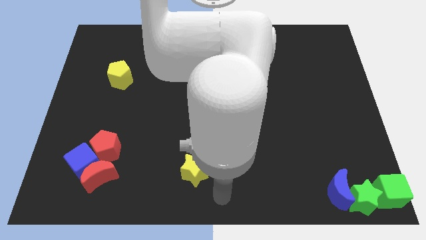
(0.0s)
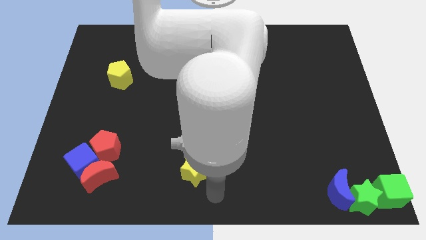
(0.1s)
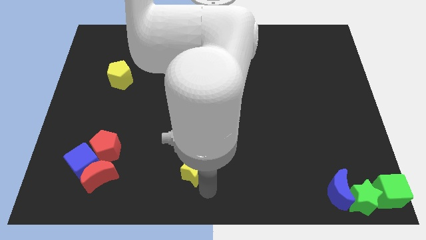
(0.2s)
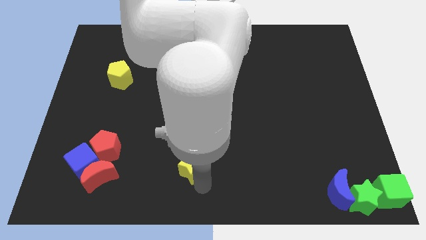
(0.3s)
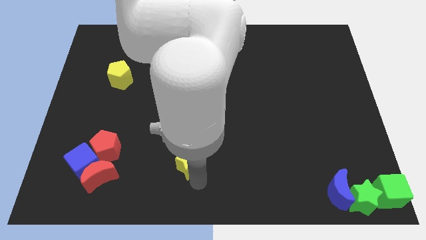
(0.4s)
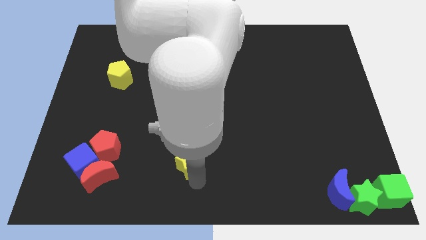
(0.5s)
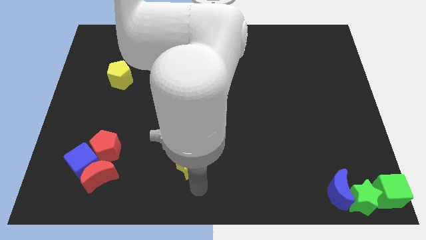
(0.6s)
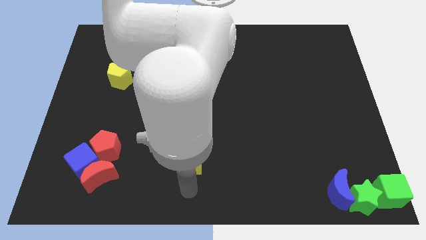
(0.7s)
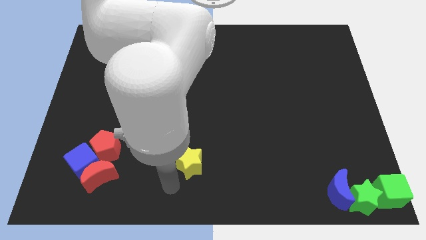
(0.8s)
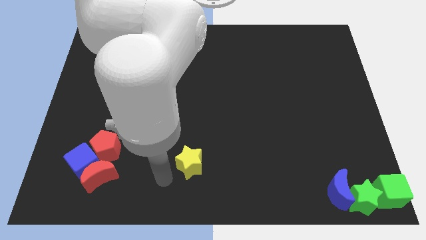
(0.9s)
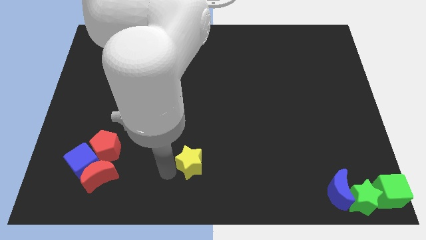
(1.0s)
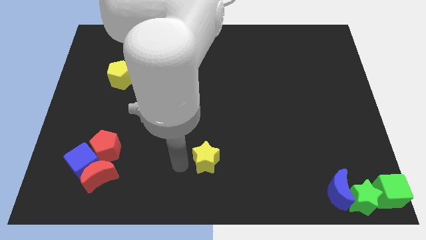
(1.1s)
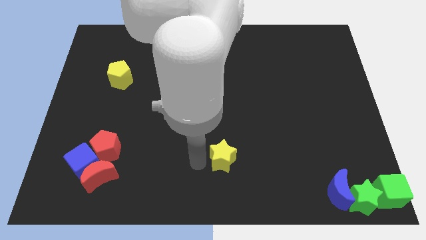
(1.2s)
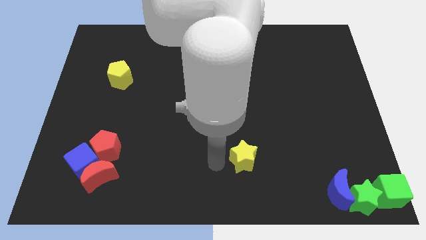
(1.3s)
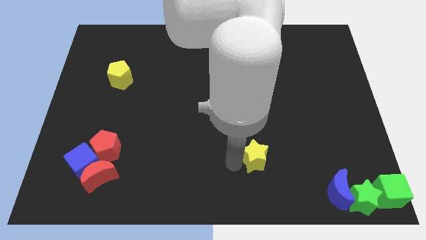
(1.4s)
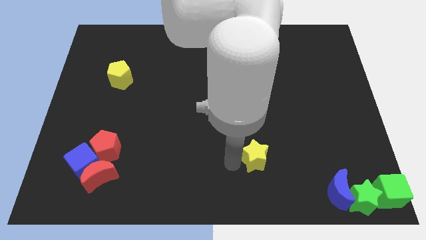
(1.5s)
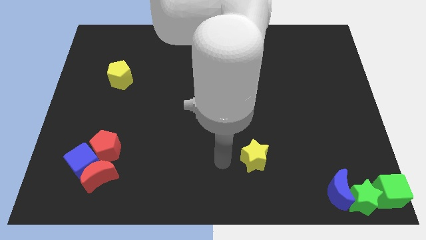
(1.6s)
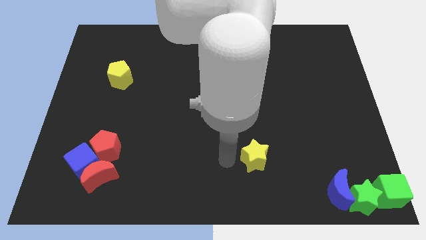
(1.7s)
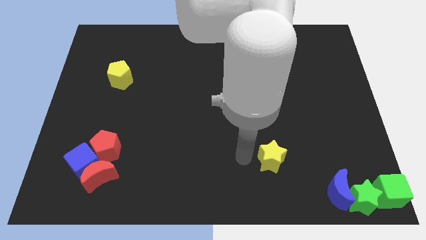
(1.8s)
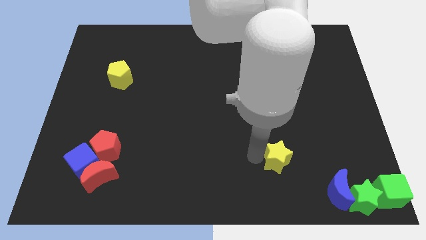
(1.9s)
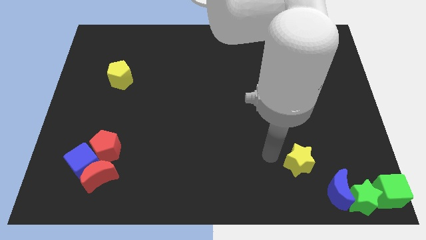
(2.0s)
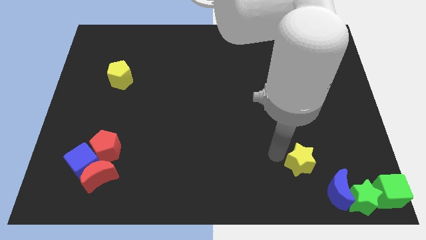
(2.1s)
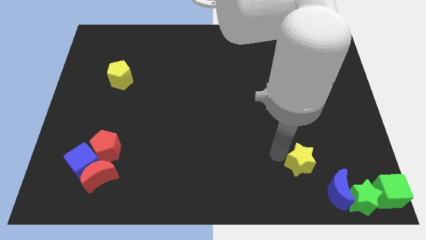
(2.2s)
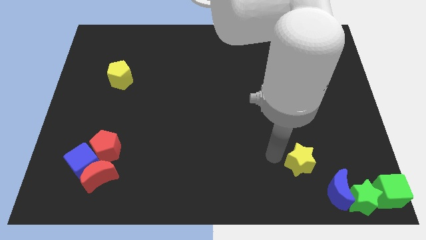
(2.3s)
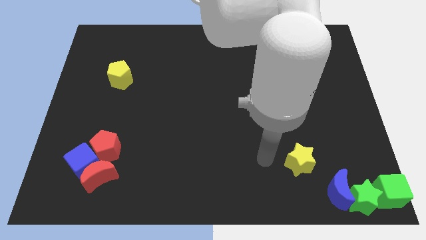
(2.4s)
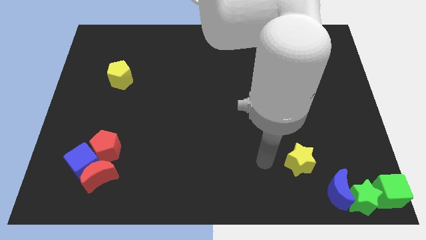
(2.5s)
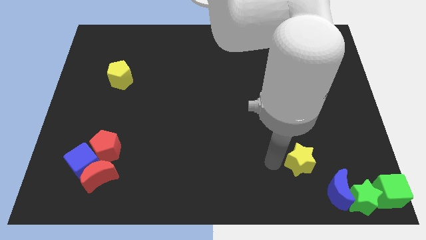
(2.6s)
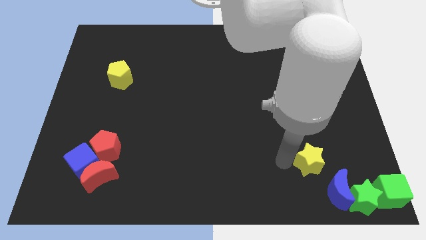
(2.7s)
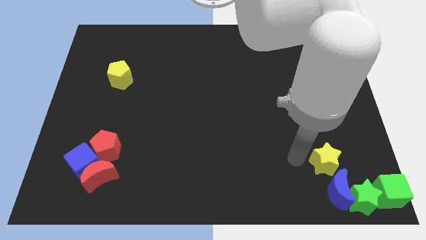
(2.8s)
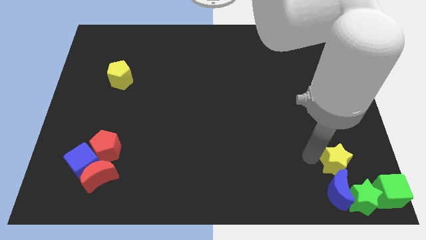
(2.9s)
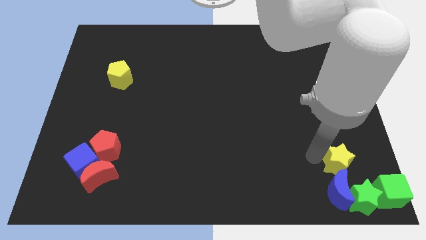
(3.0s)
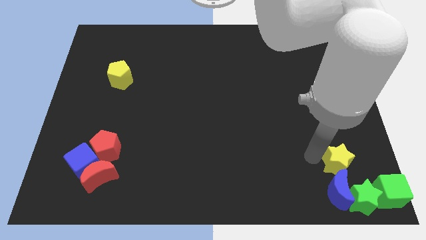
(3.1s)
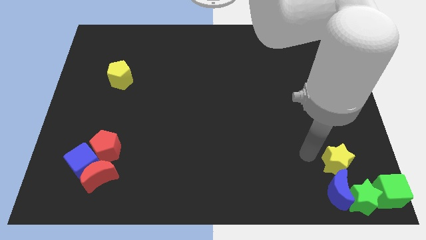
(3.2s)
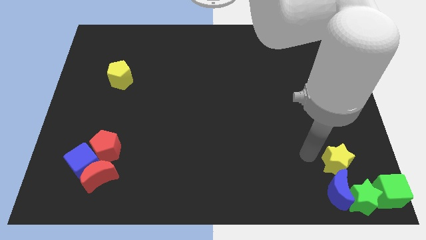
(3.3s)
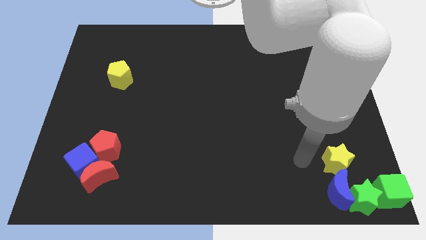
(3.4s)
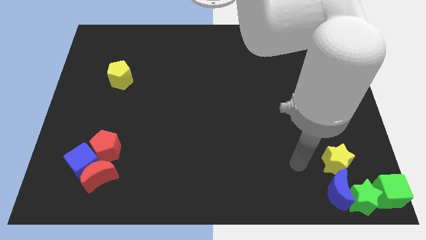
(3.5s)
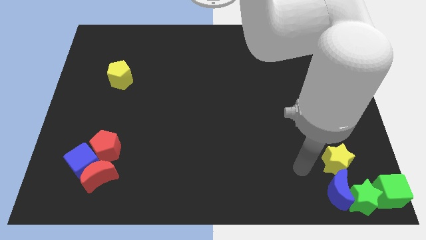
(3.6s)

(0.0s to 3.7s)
move the yellow star top to the blue crescent

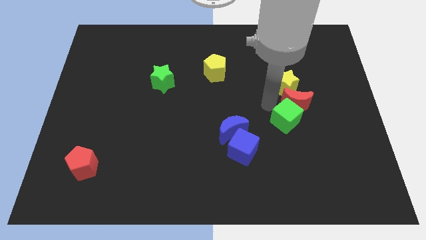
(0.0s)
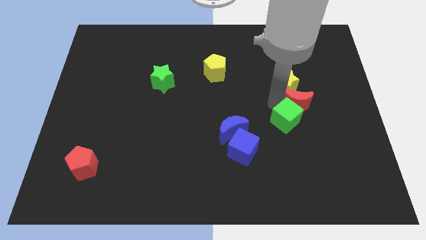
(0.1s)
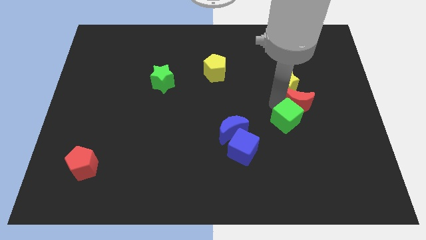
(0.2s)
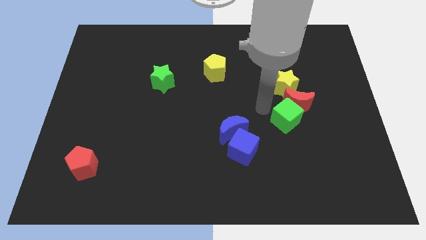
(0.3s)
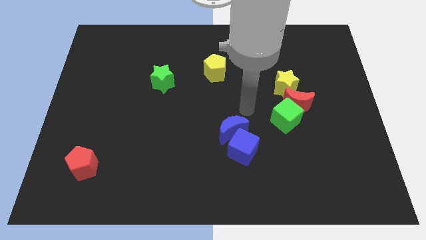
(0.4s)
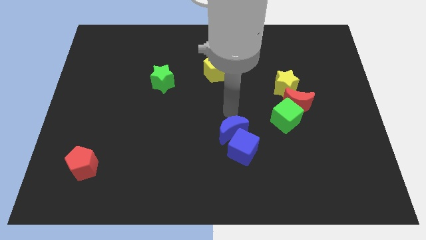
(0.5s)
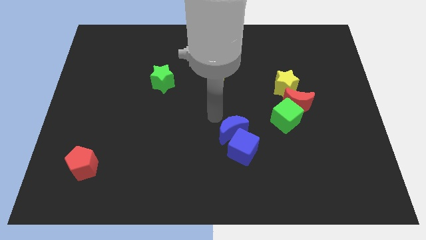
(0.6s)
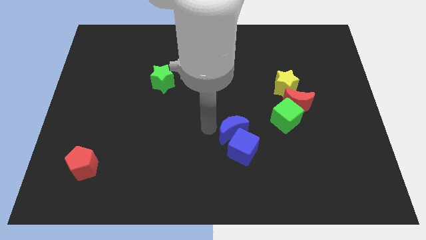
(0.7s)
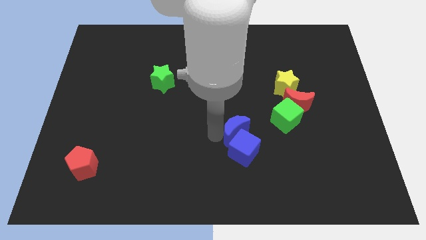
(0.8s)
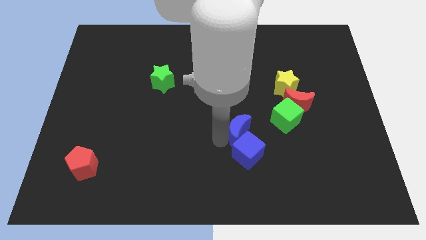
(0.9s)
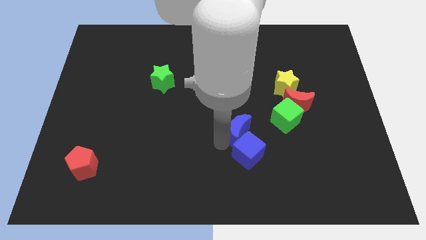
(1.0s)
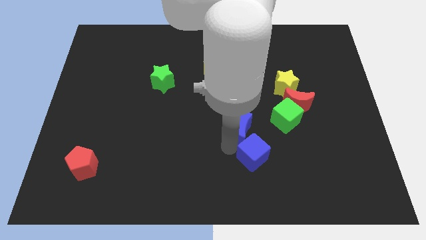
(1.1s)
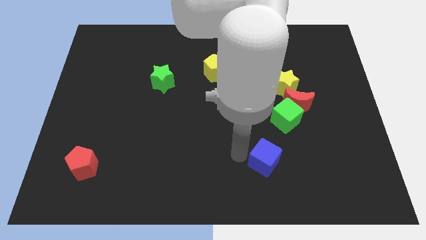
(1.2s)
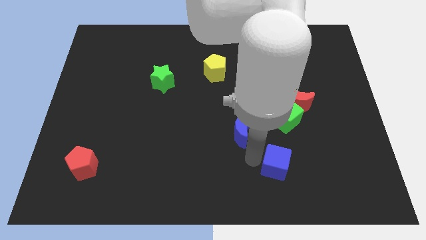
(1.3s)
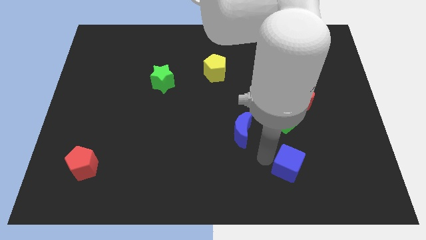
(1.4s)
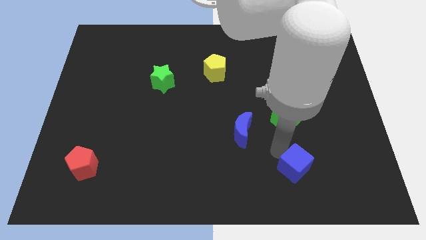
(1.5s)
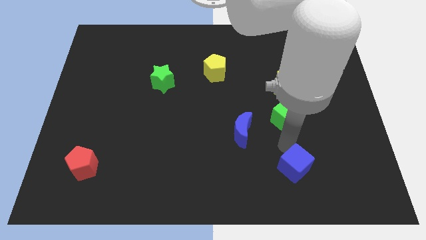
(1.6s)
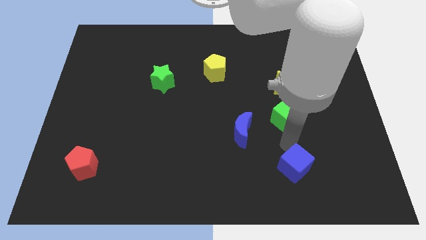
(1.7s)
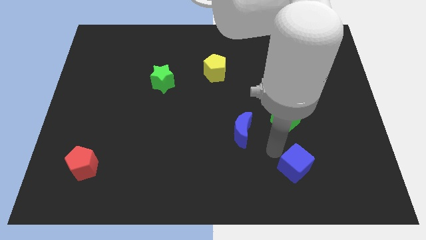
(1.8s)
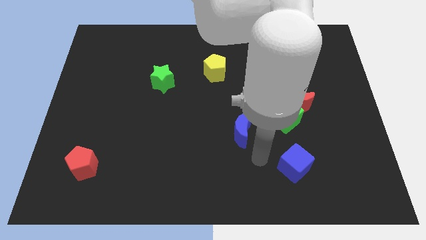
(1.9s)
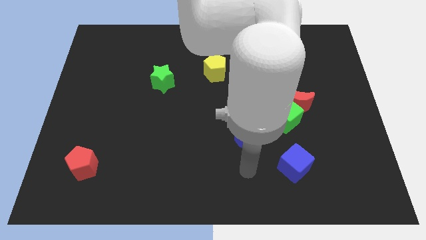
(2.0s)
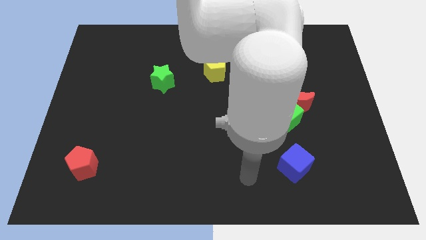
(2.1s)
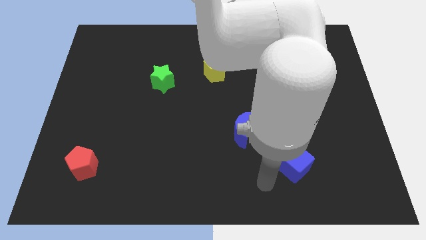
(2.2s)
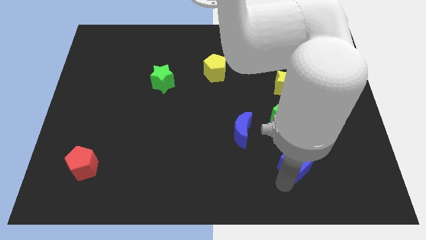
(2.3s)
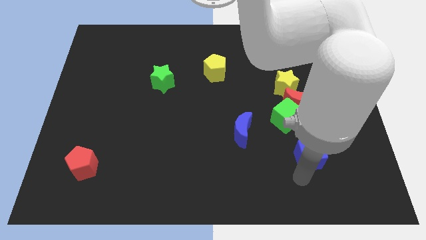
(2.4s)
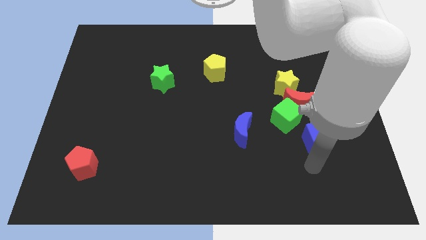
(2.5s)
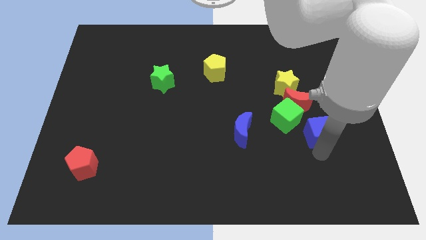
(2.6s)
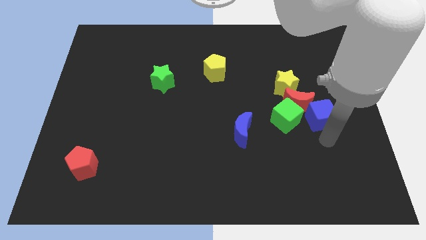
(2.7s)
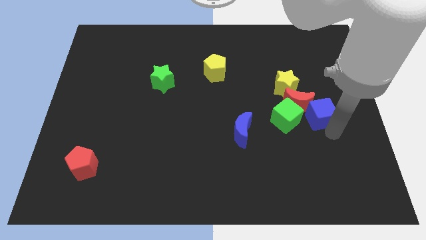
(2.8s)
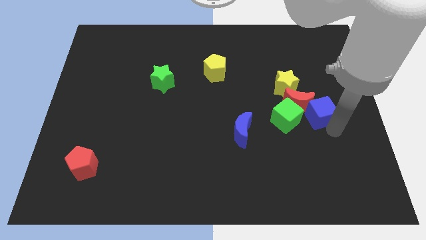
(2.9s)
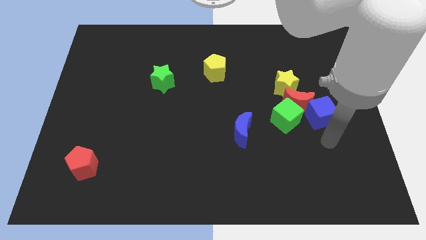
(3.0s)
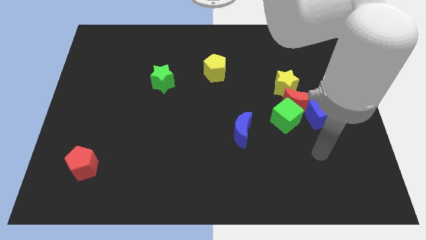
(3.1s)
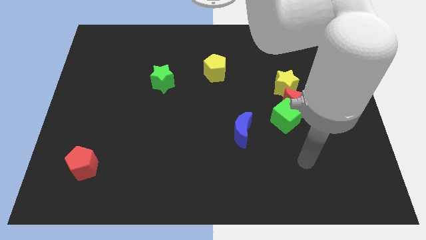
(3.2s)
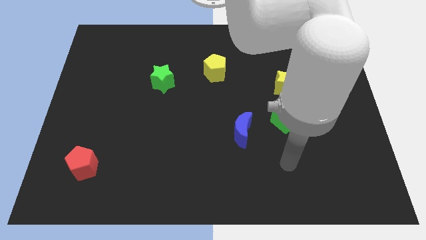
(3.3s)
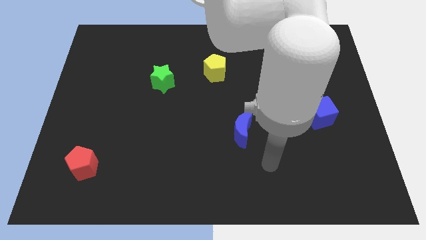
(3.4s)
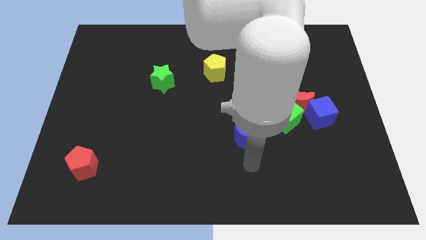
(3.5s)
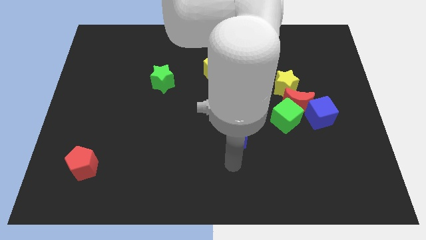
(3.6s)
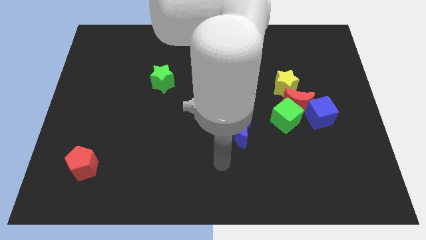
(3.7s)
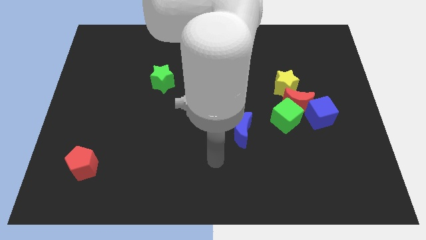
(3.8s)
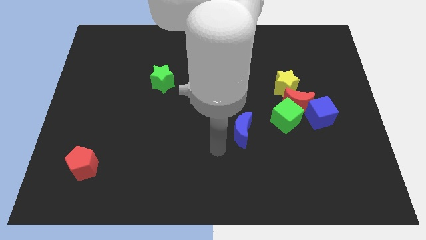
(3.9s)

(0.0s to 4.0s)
push the blue cube to the right of the green cube

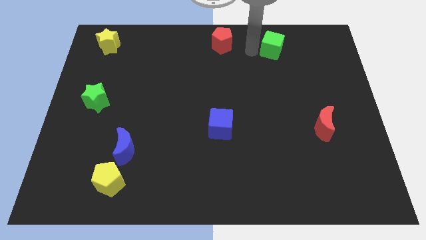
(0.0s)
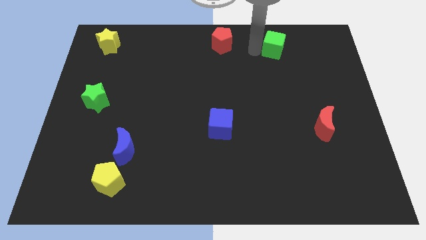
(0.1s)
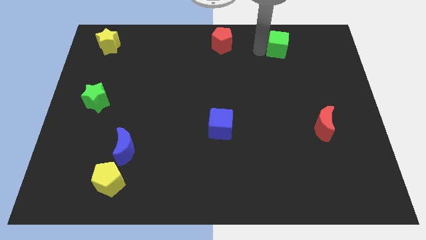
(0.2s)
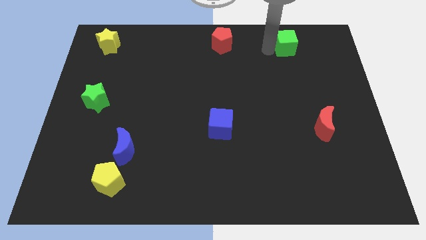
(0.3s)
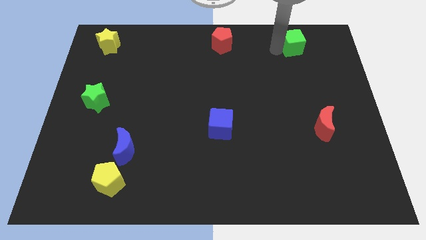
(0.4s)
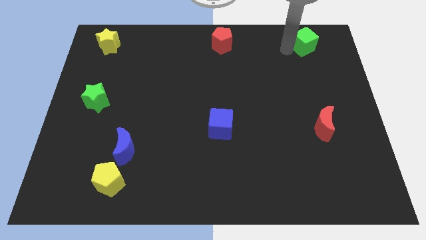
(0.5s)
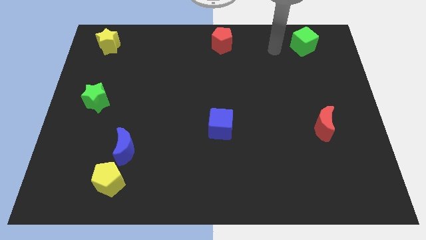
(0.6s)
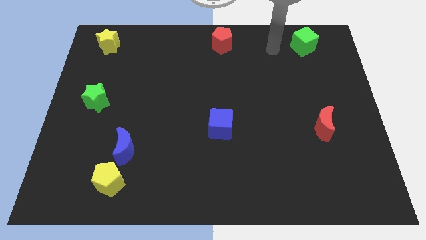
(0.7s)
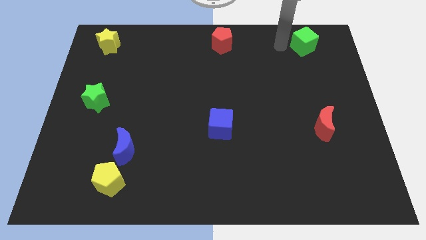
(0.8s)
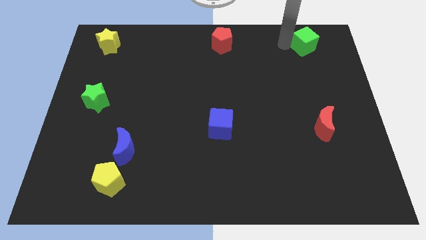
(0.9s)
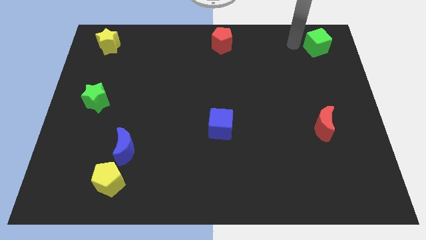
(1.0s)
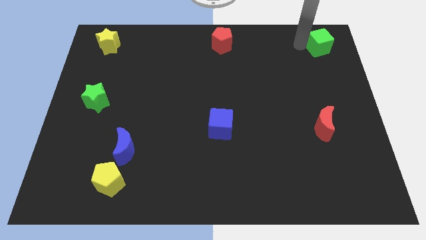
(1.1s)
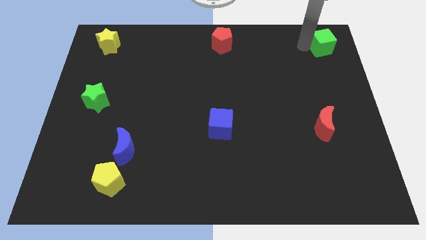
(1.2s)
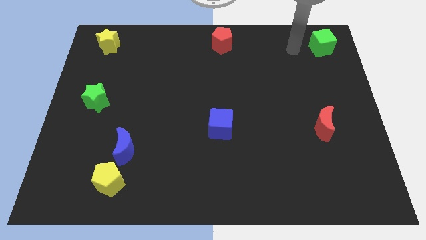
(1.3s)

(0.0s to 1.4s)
move the green square at the top right side
